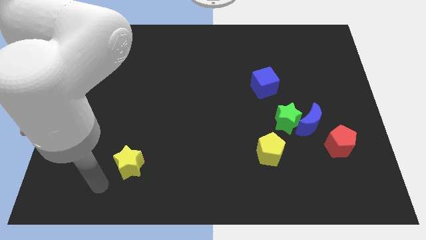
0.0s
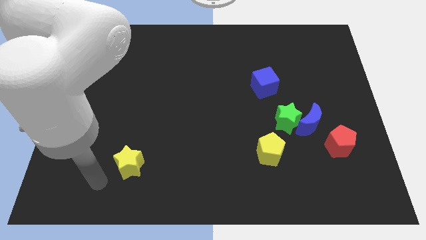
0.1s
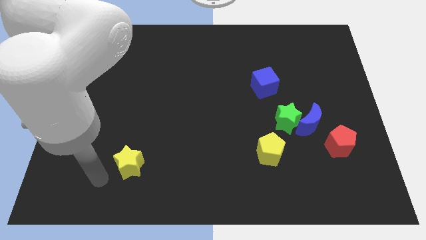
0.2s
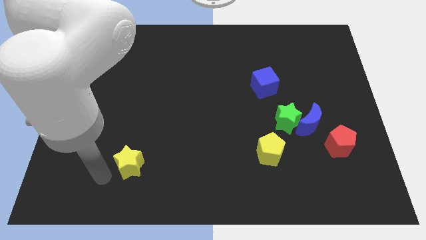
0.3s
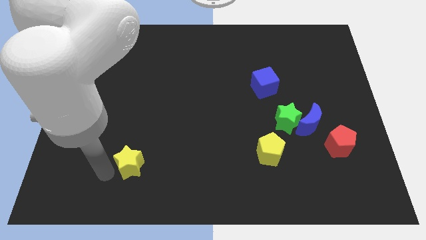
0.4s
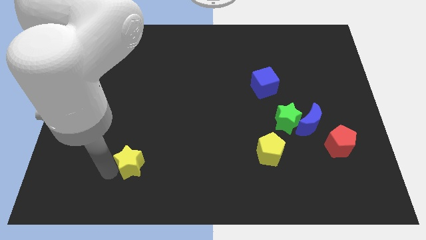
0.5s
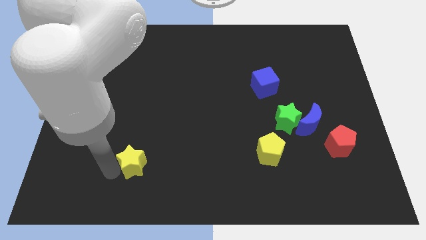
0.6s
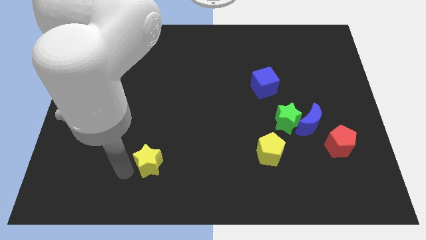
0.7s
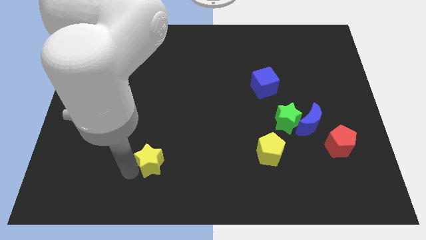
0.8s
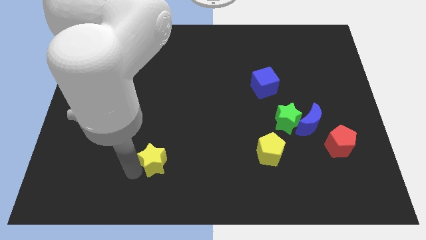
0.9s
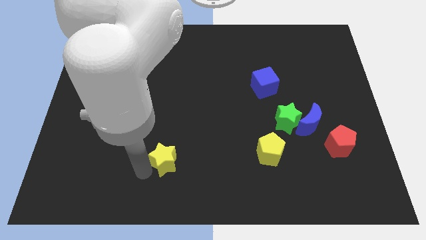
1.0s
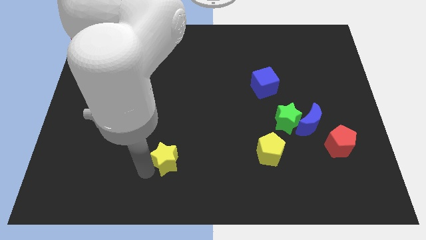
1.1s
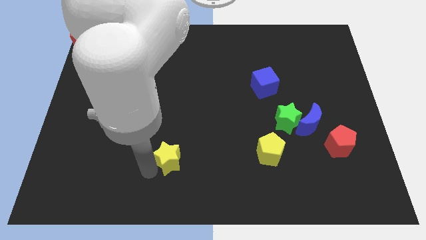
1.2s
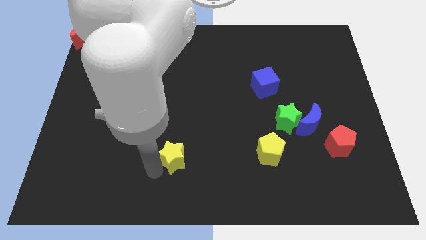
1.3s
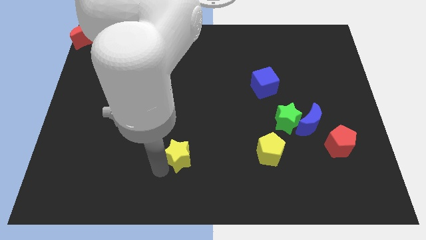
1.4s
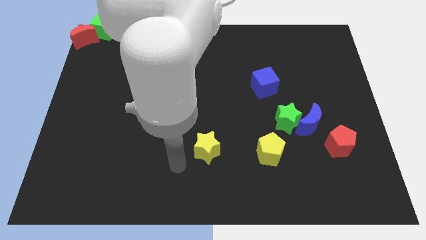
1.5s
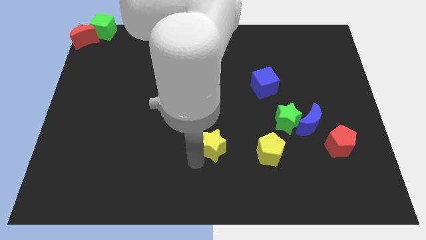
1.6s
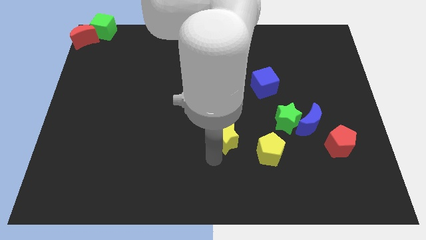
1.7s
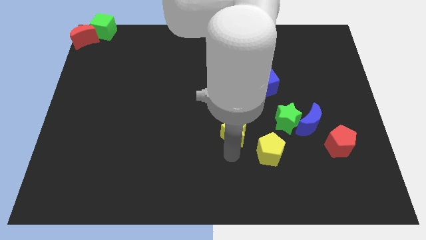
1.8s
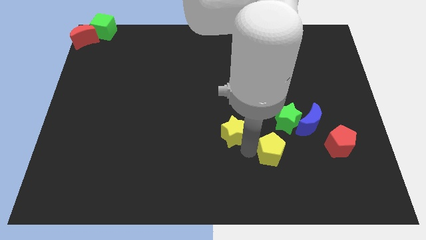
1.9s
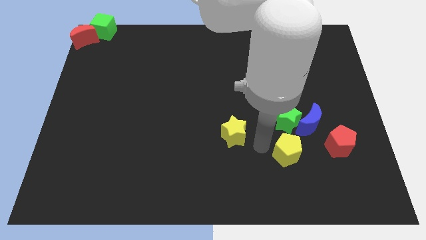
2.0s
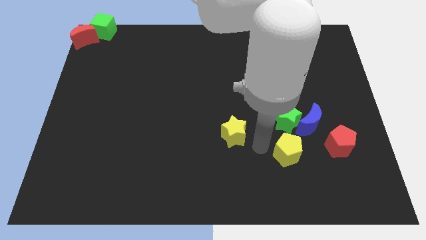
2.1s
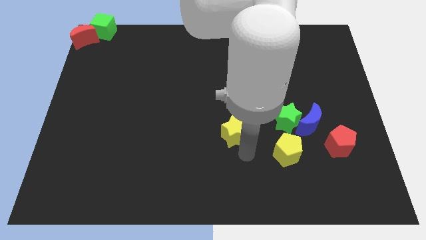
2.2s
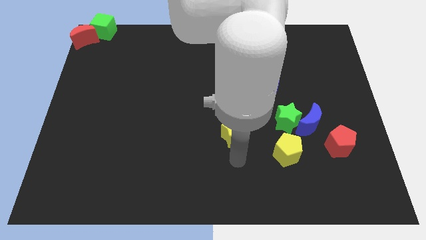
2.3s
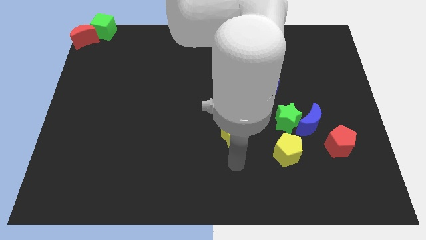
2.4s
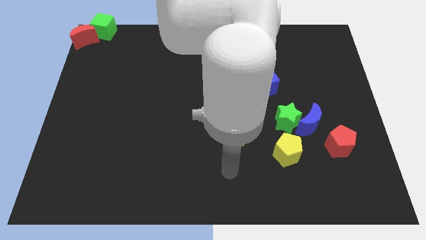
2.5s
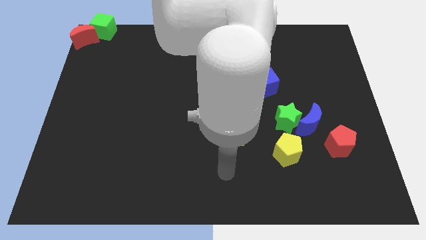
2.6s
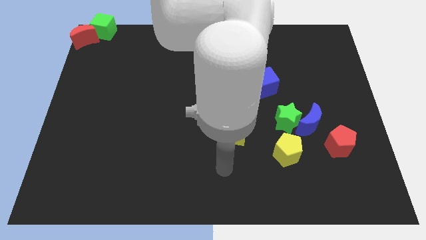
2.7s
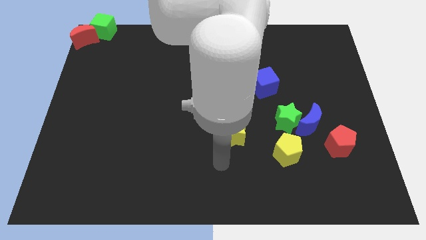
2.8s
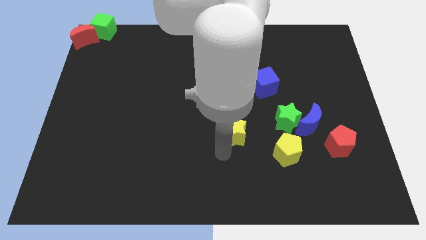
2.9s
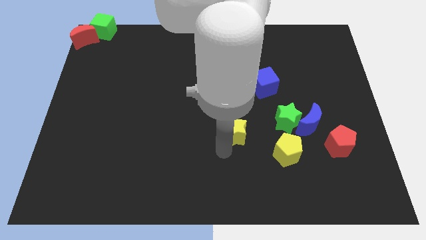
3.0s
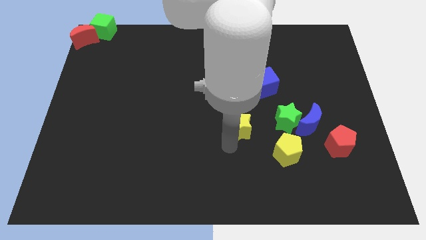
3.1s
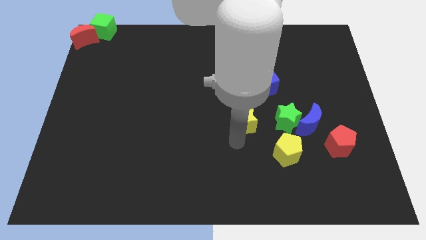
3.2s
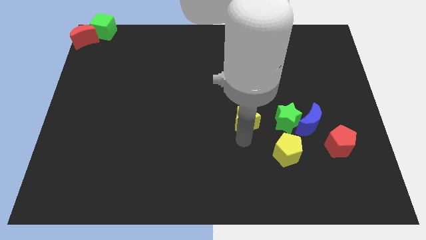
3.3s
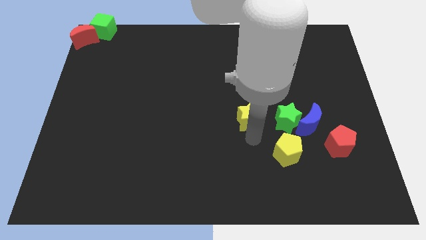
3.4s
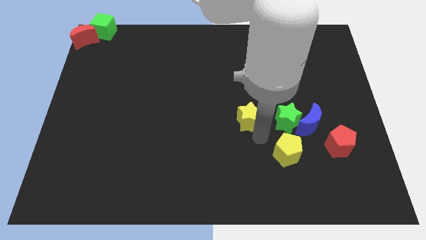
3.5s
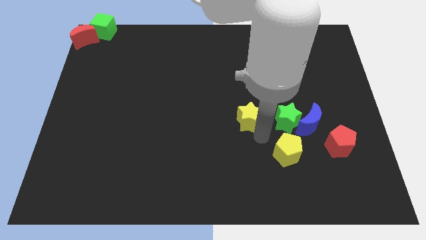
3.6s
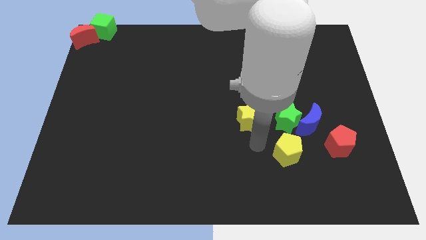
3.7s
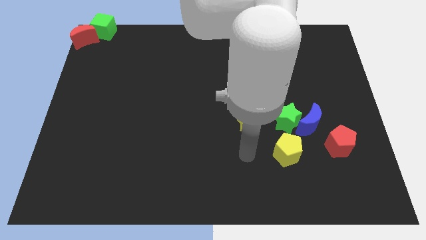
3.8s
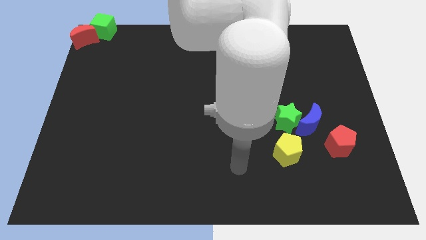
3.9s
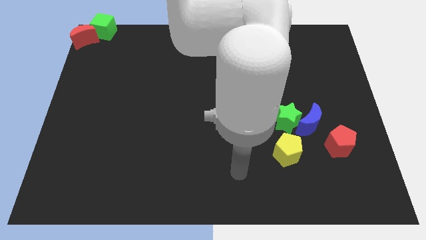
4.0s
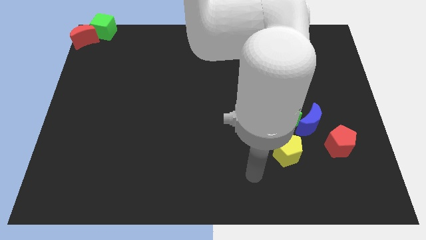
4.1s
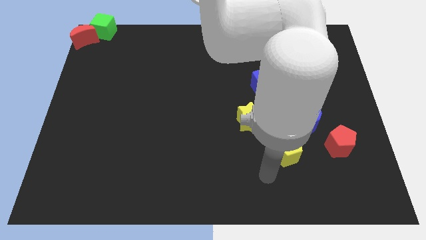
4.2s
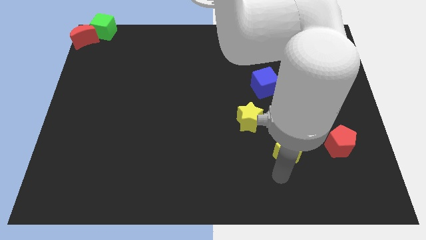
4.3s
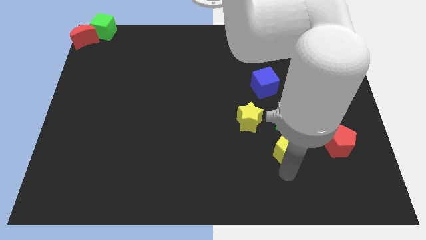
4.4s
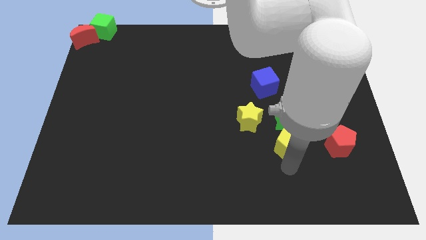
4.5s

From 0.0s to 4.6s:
move the yellow star to the right center of the board

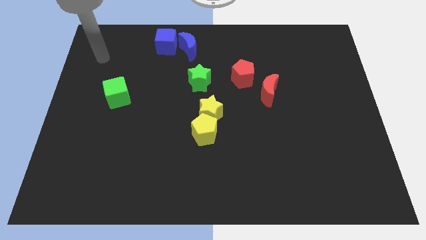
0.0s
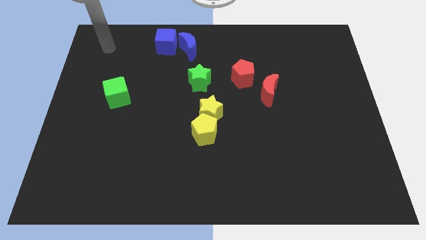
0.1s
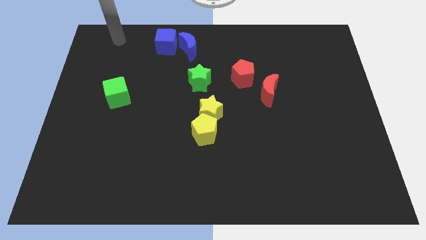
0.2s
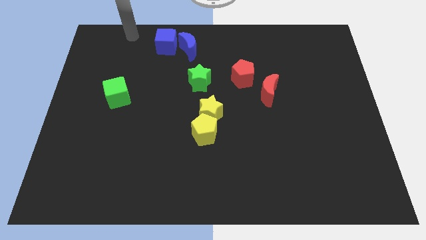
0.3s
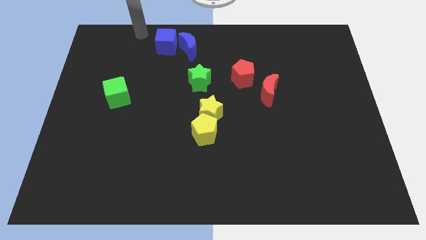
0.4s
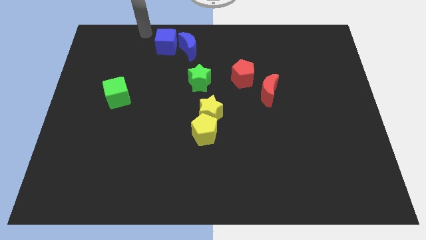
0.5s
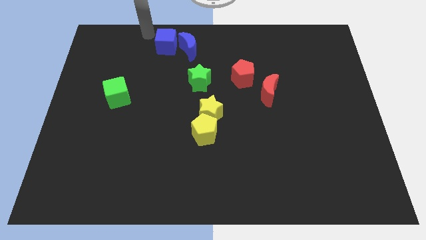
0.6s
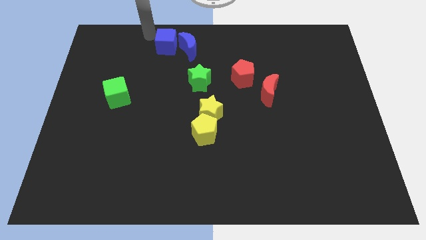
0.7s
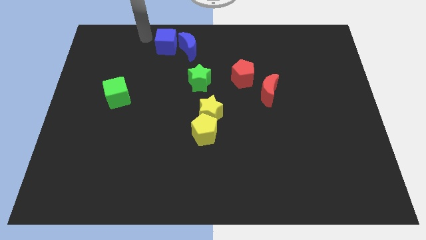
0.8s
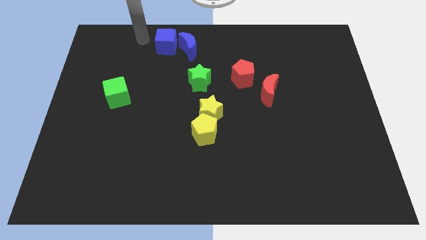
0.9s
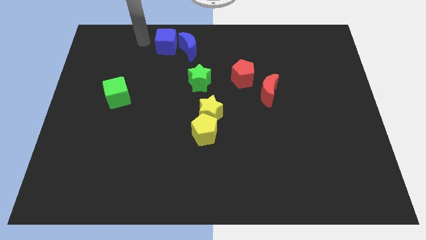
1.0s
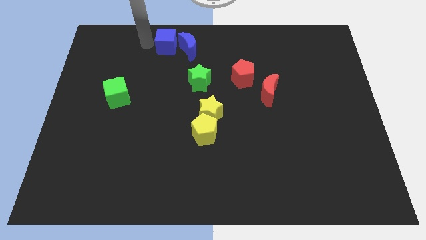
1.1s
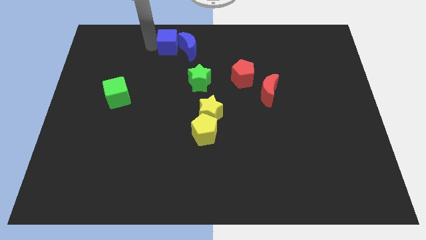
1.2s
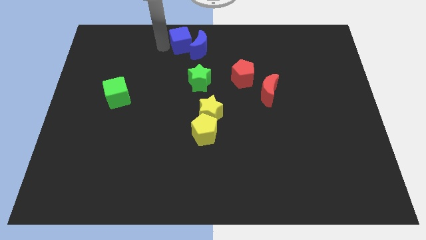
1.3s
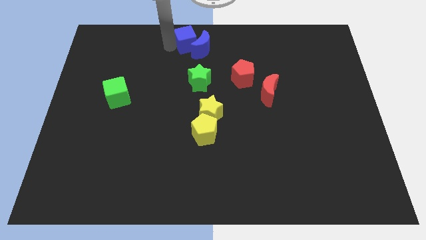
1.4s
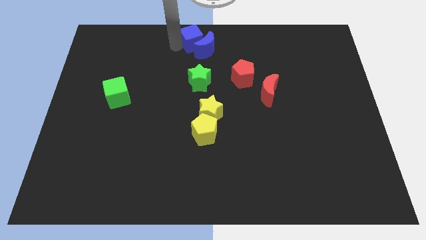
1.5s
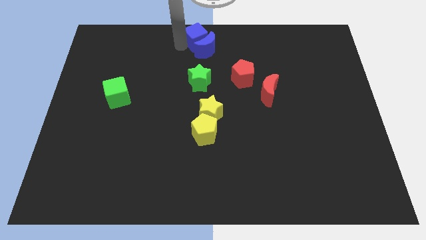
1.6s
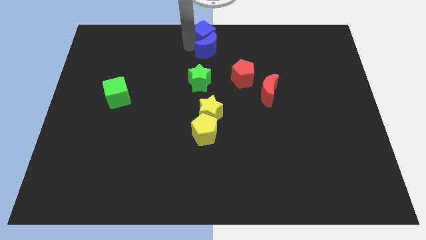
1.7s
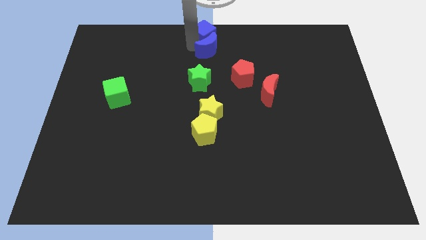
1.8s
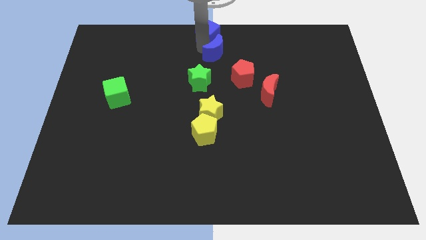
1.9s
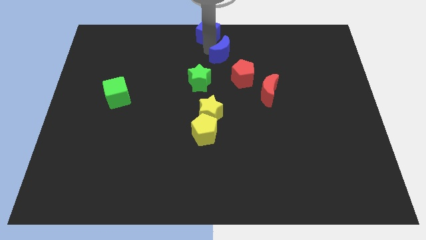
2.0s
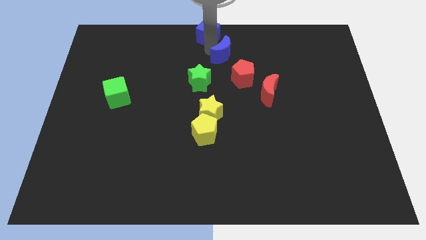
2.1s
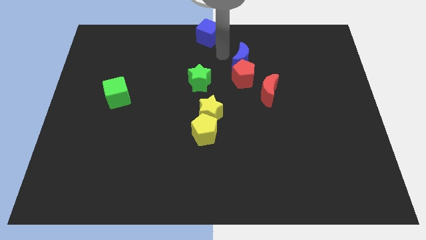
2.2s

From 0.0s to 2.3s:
place the blue cube at the top center

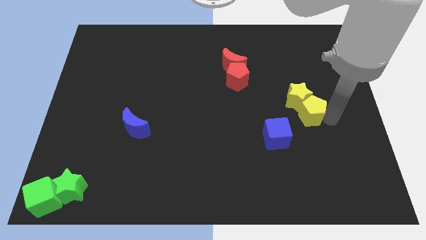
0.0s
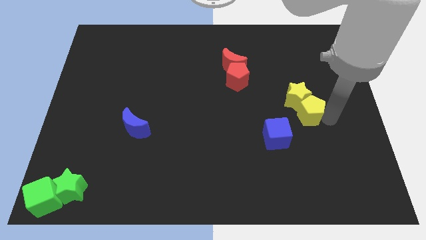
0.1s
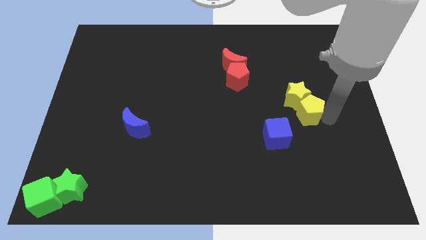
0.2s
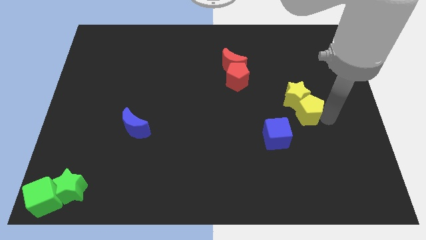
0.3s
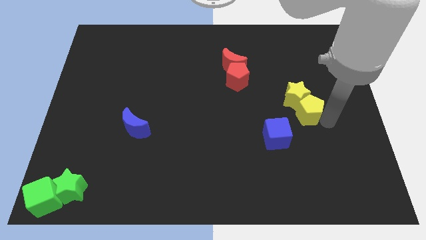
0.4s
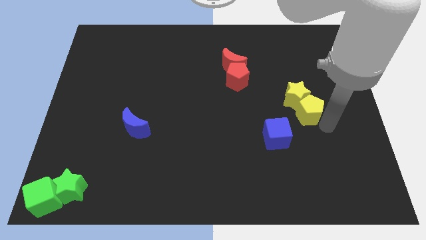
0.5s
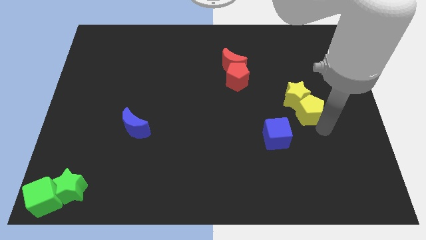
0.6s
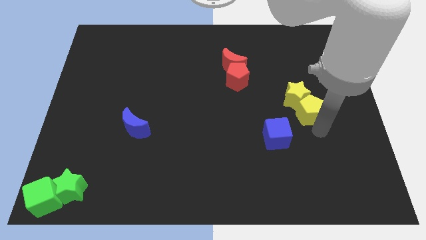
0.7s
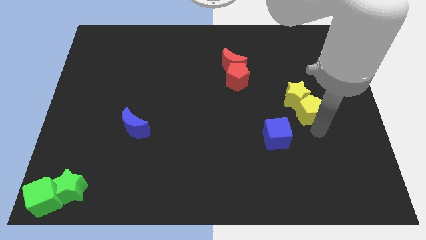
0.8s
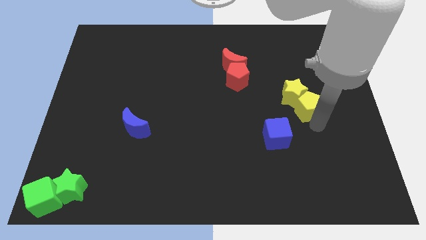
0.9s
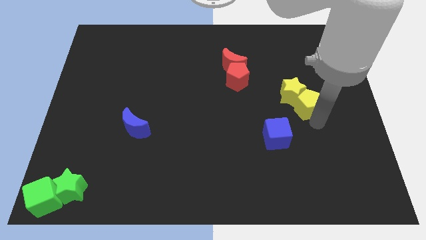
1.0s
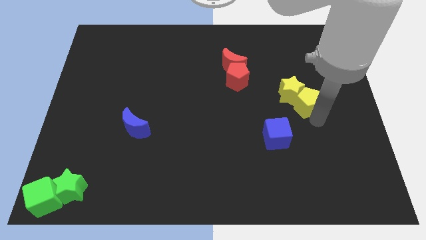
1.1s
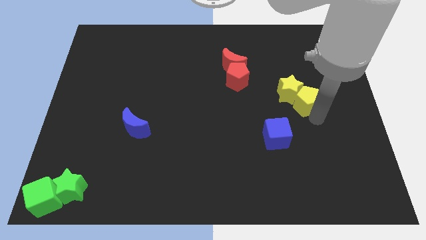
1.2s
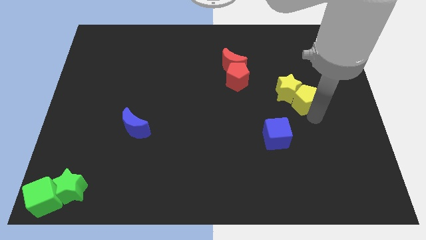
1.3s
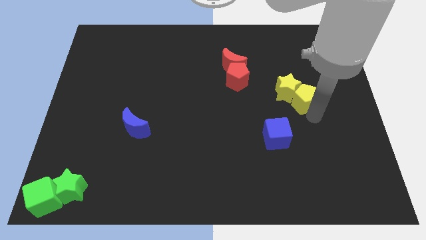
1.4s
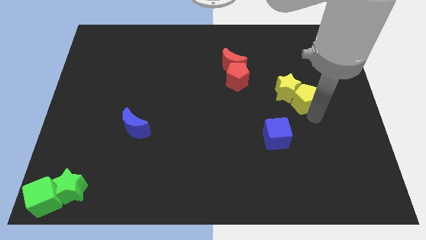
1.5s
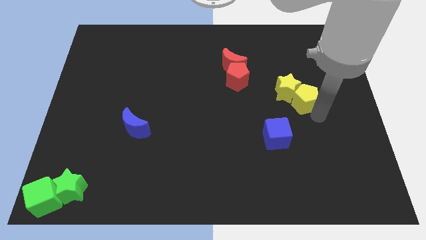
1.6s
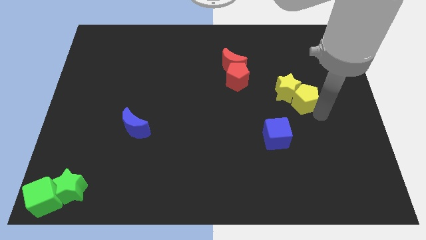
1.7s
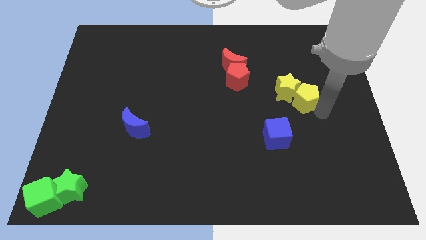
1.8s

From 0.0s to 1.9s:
place the yellow blocks diagonal to the blue cube
